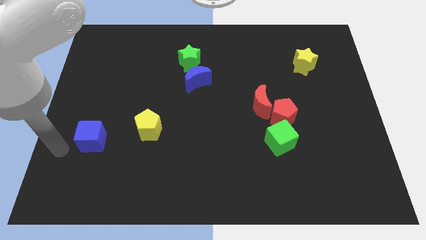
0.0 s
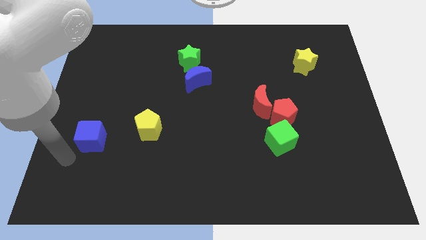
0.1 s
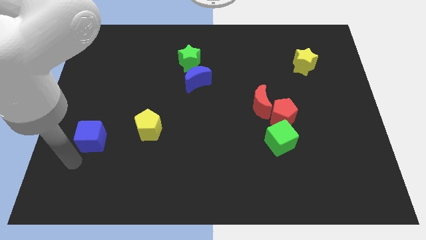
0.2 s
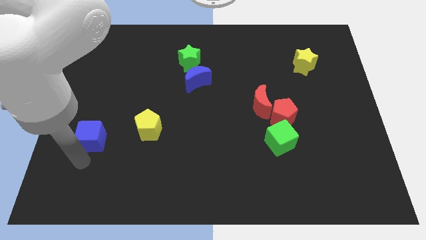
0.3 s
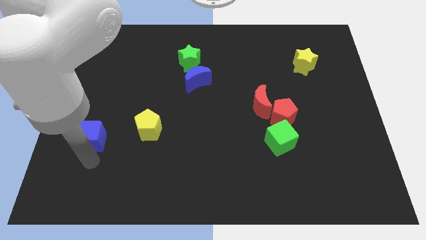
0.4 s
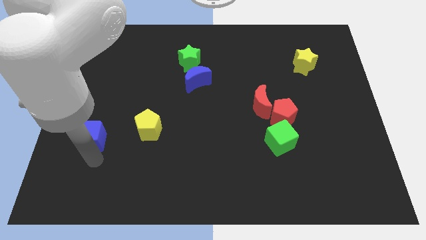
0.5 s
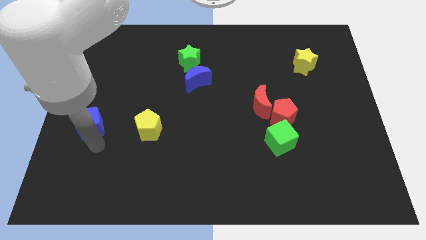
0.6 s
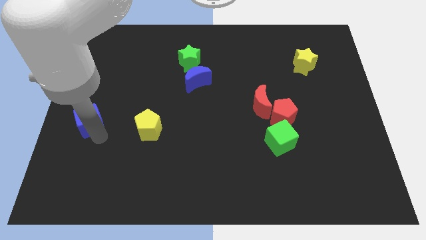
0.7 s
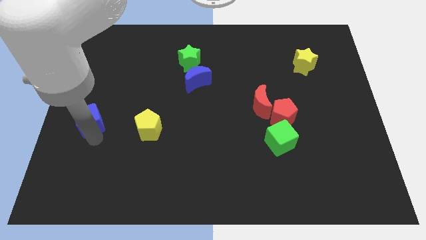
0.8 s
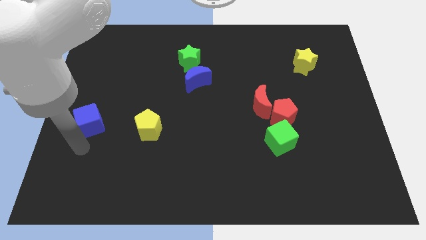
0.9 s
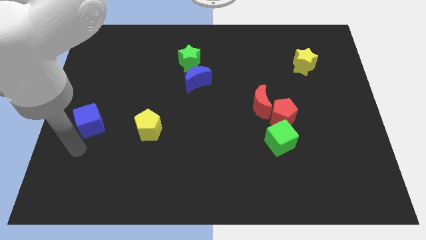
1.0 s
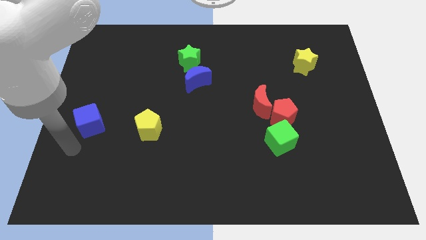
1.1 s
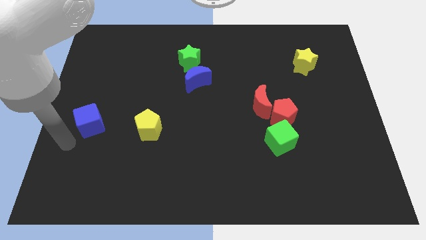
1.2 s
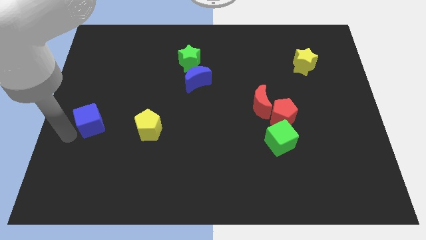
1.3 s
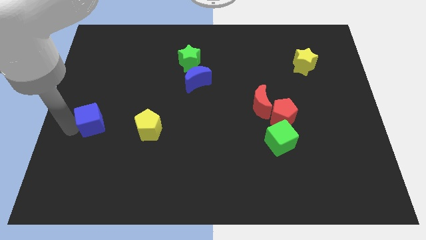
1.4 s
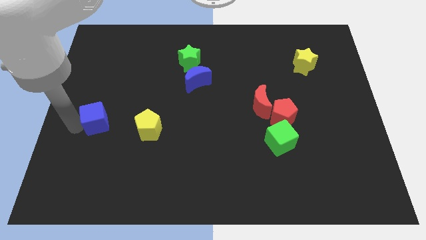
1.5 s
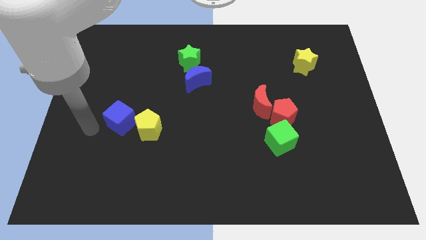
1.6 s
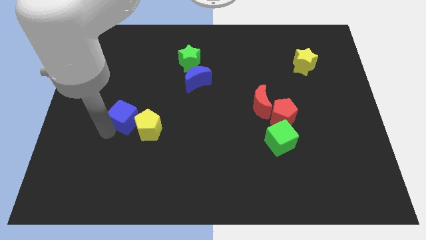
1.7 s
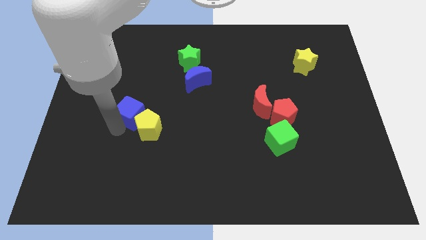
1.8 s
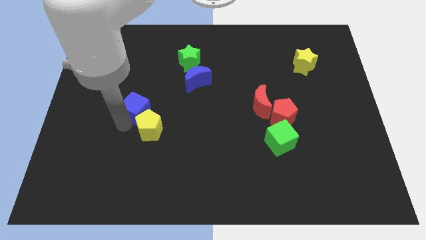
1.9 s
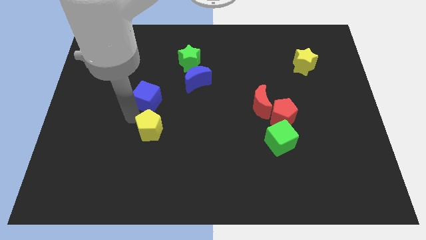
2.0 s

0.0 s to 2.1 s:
move blue cube towards the blue moon

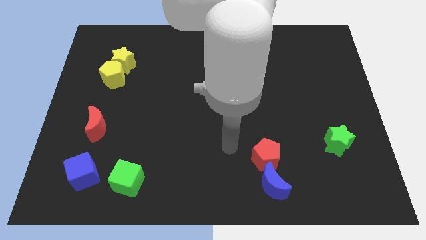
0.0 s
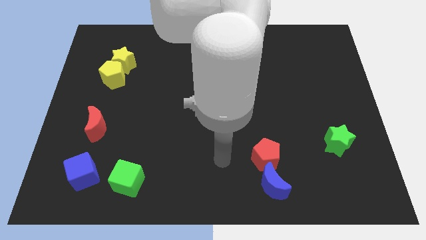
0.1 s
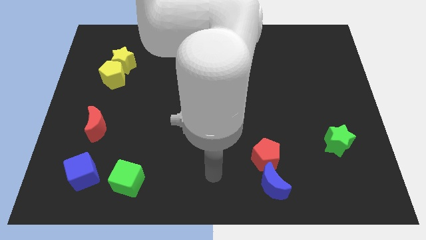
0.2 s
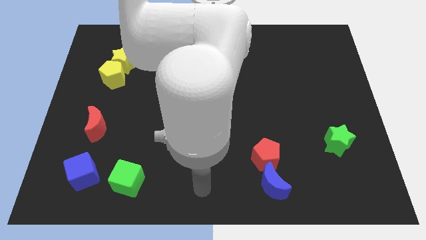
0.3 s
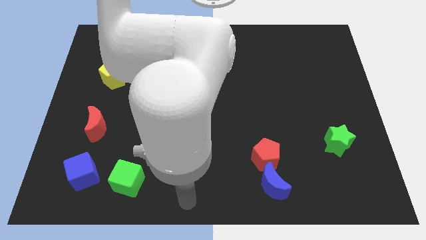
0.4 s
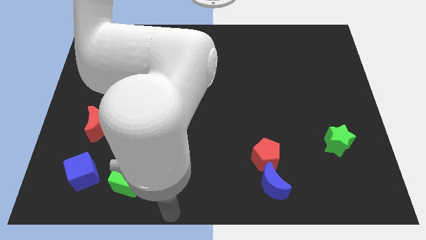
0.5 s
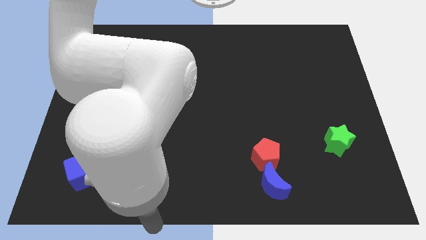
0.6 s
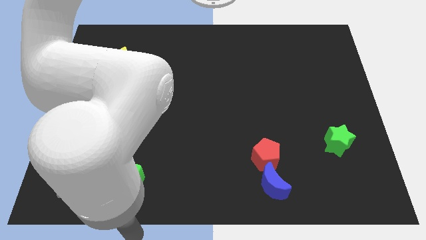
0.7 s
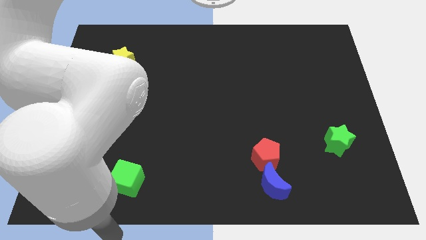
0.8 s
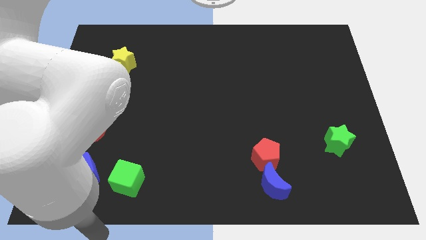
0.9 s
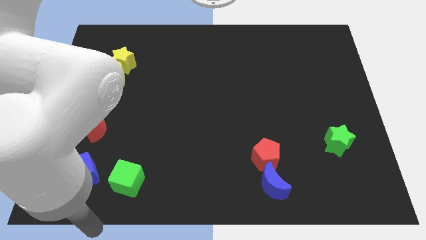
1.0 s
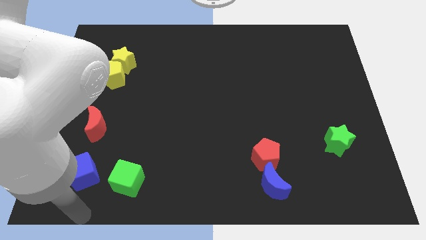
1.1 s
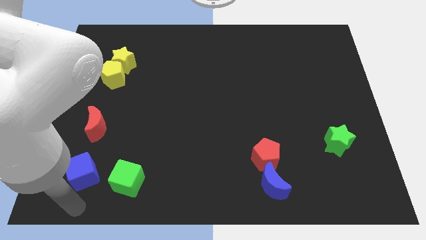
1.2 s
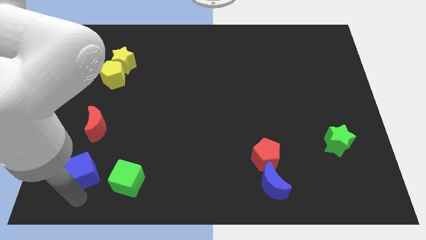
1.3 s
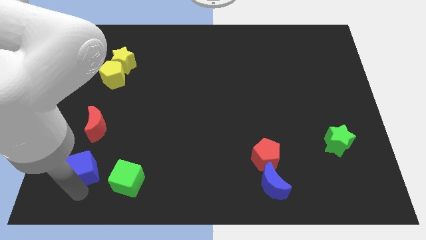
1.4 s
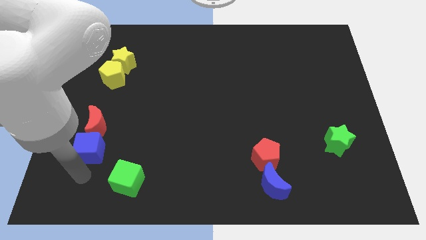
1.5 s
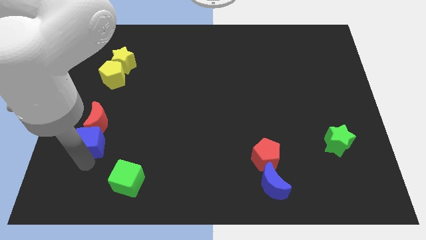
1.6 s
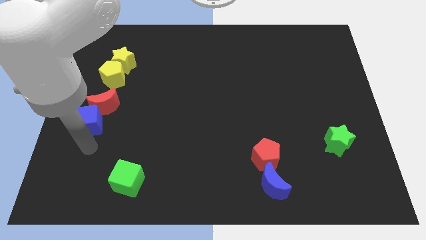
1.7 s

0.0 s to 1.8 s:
push the blue cube into the red crescent

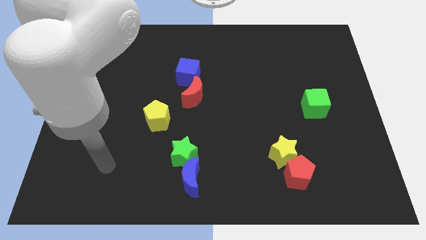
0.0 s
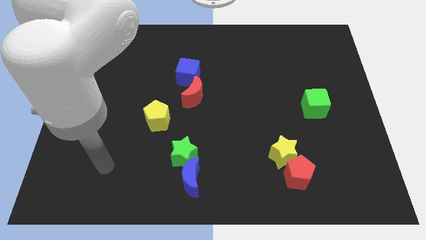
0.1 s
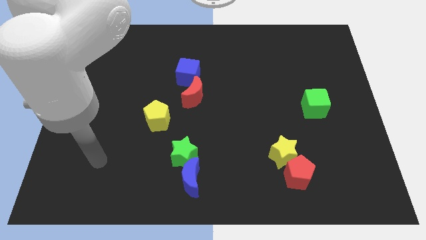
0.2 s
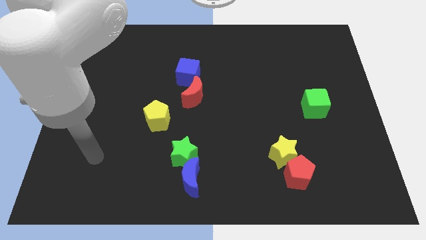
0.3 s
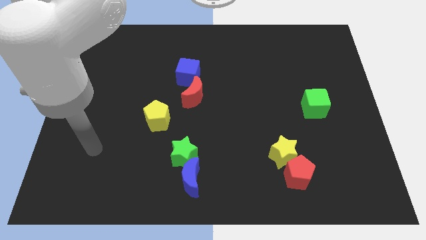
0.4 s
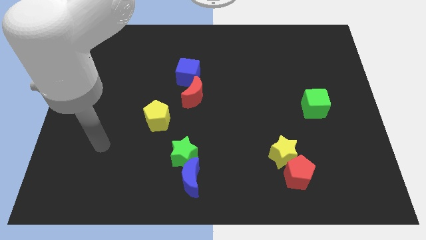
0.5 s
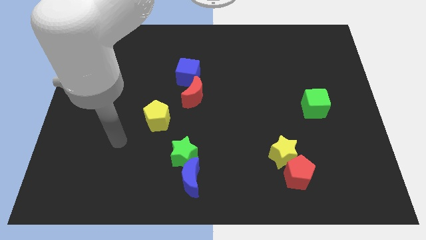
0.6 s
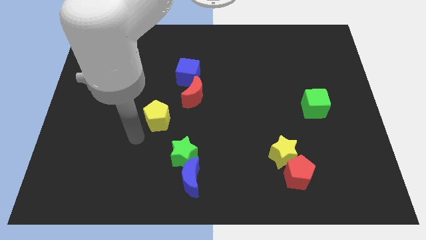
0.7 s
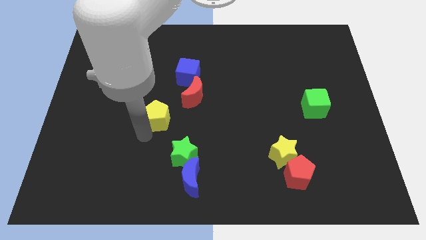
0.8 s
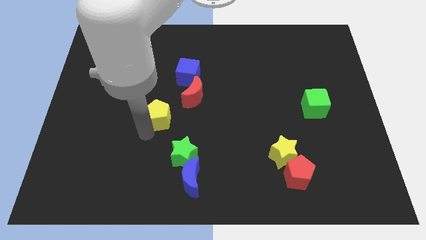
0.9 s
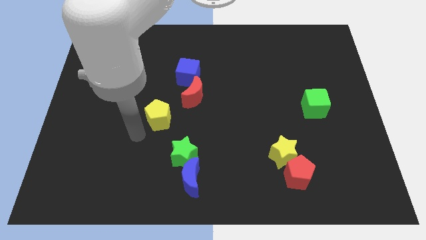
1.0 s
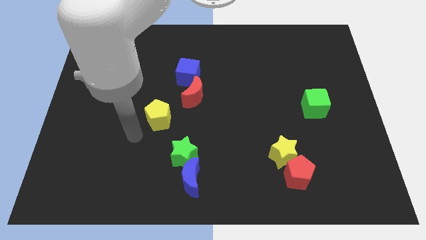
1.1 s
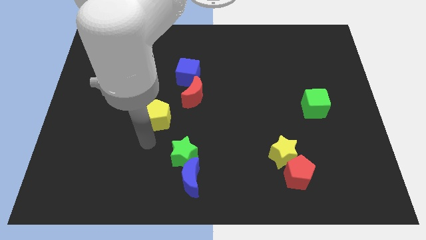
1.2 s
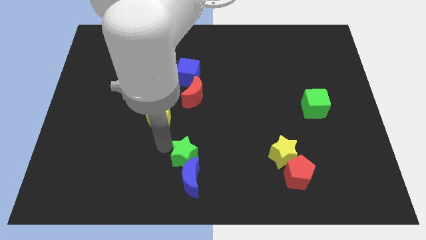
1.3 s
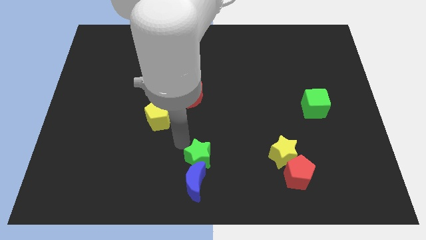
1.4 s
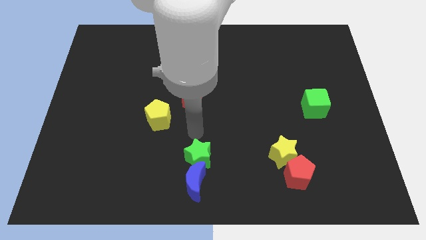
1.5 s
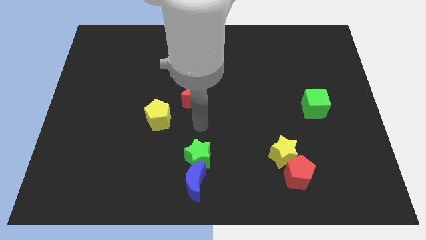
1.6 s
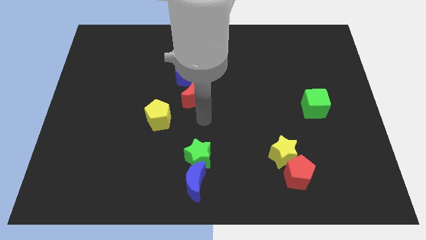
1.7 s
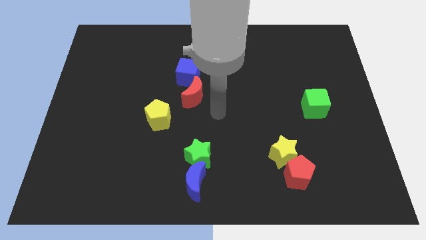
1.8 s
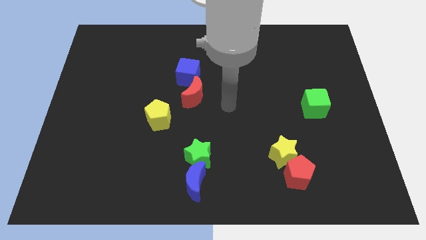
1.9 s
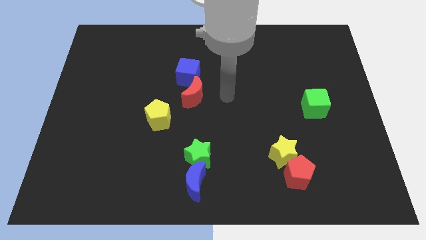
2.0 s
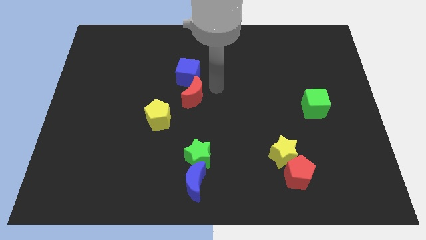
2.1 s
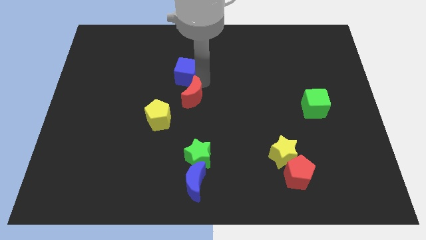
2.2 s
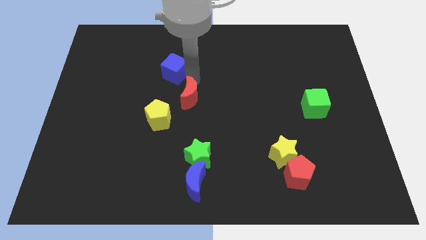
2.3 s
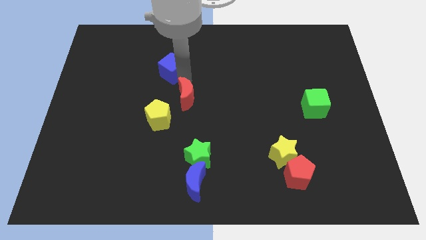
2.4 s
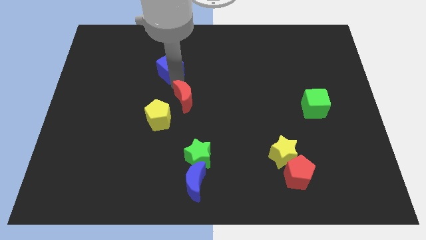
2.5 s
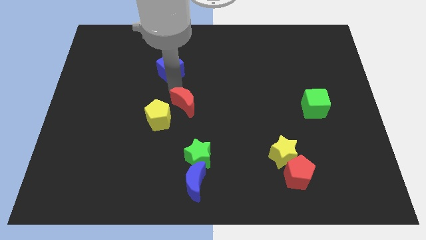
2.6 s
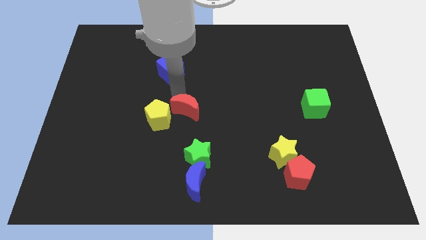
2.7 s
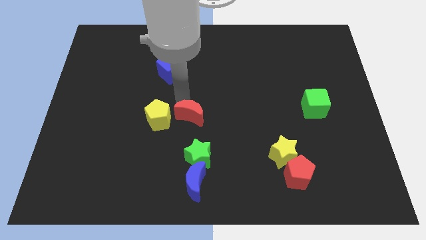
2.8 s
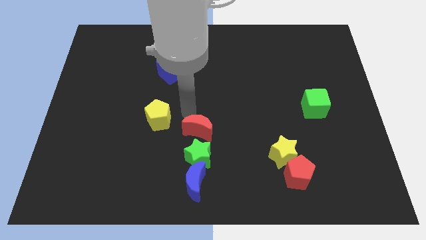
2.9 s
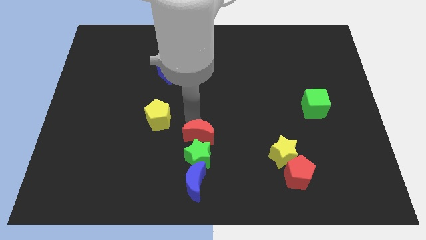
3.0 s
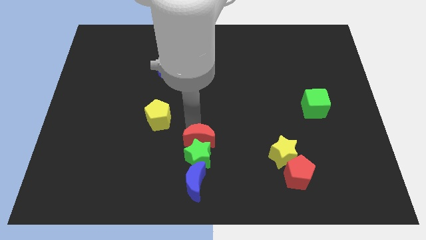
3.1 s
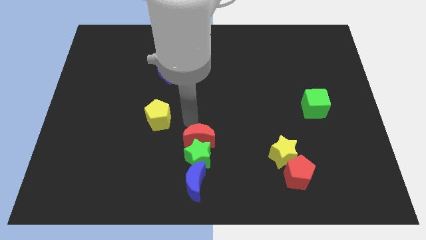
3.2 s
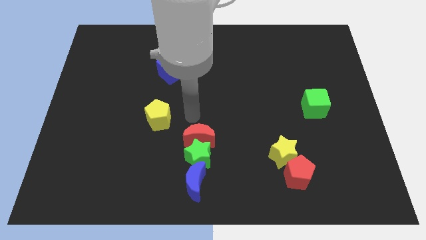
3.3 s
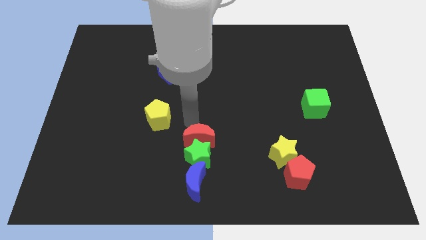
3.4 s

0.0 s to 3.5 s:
place the red moon vertically above the green star

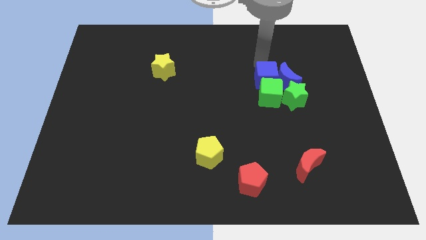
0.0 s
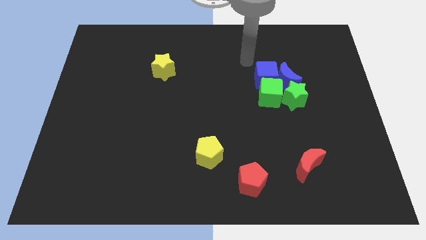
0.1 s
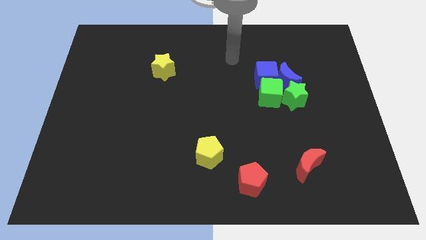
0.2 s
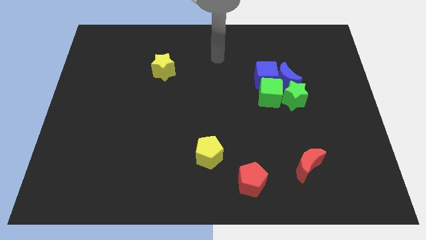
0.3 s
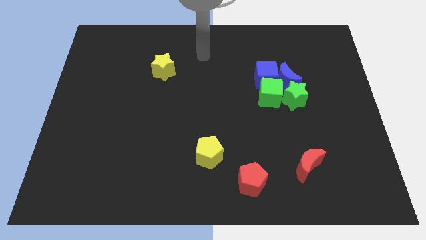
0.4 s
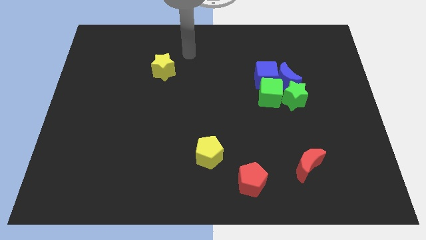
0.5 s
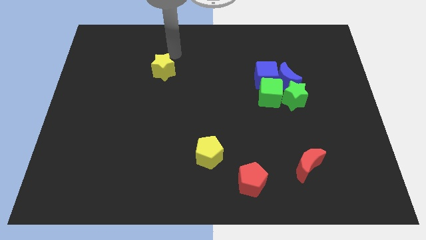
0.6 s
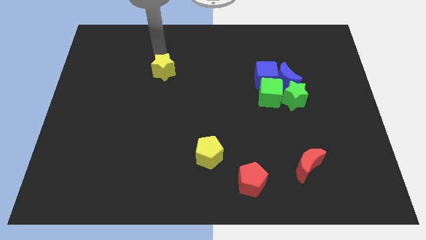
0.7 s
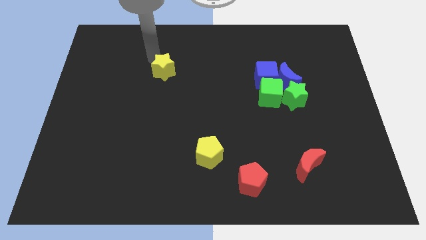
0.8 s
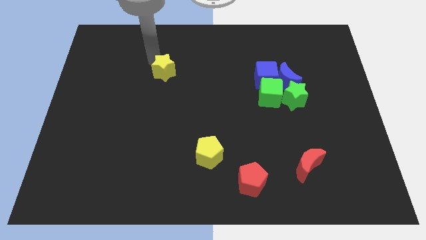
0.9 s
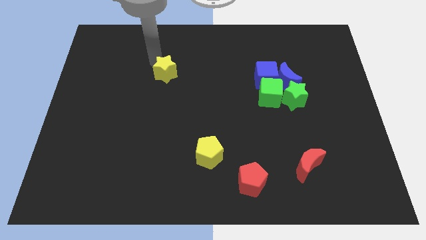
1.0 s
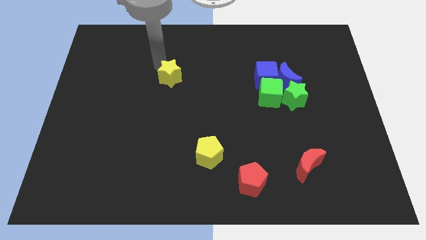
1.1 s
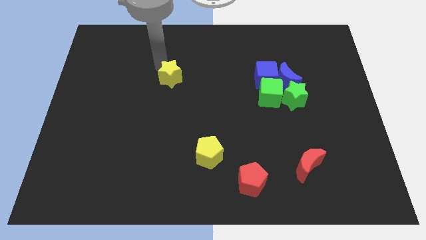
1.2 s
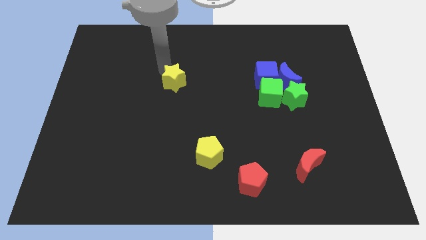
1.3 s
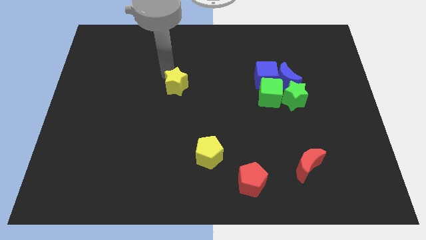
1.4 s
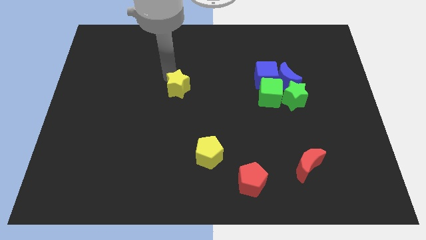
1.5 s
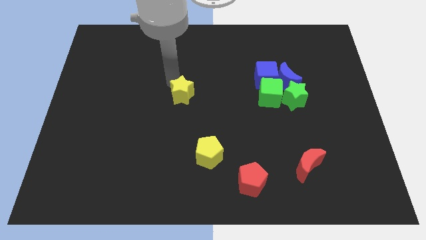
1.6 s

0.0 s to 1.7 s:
push yellow star slightly towards down
